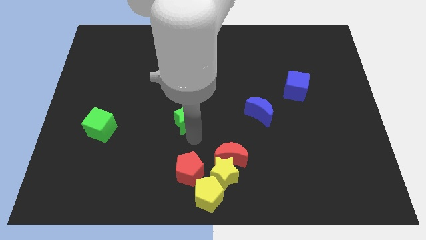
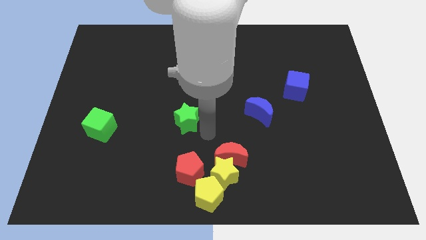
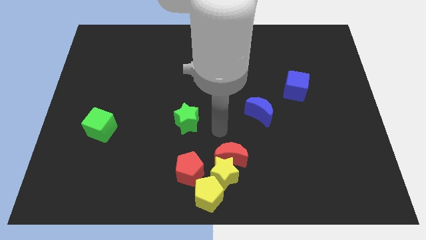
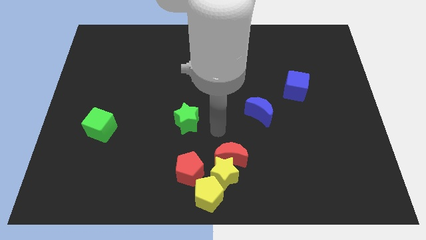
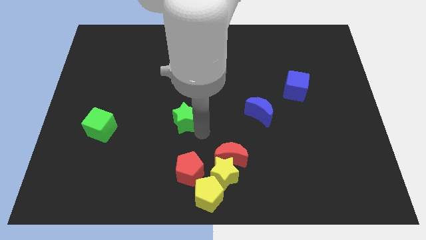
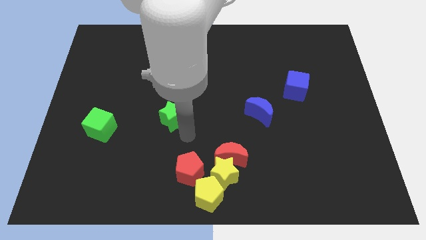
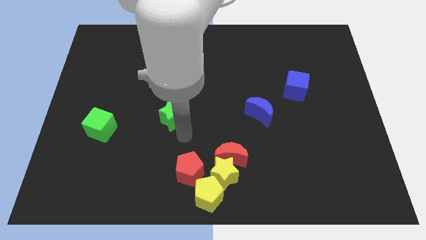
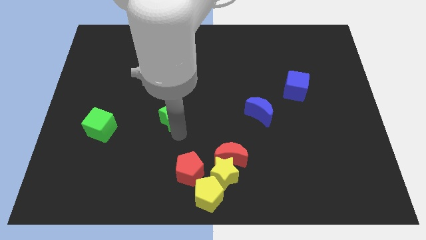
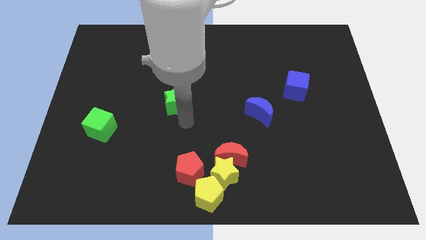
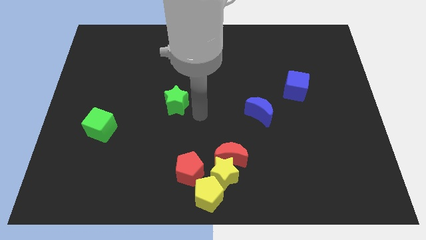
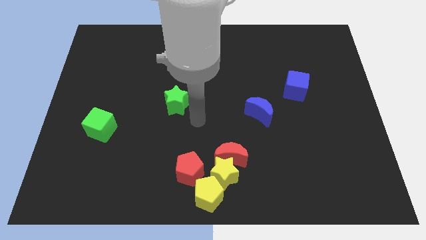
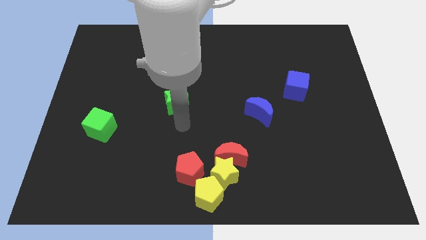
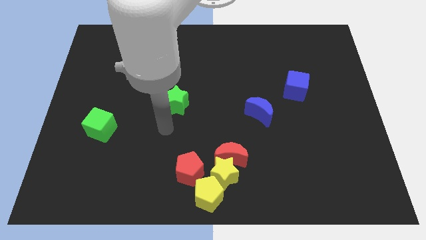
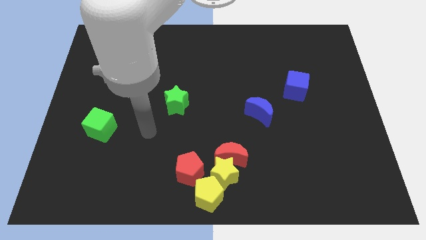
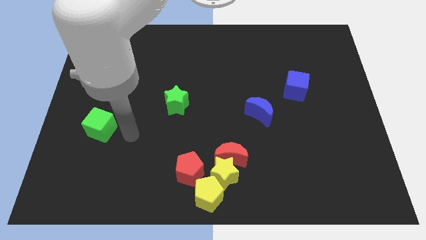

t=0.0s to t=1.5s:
slide the green star slightly towards up

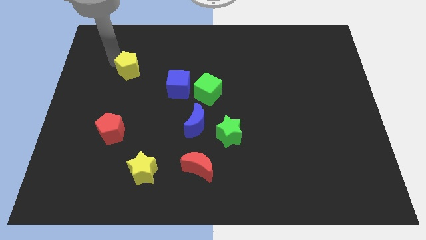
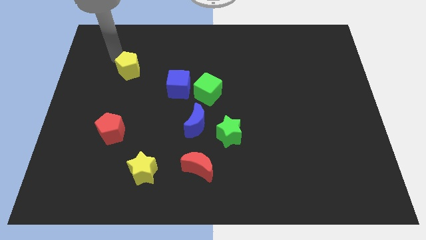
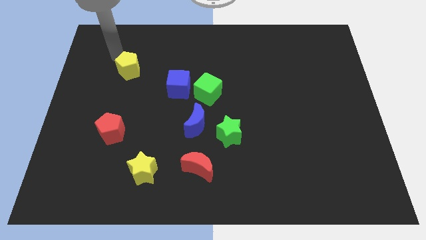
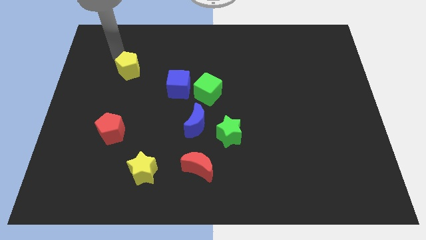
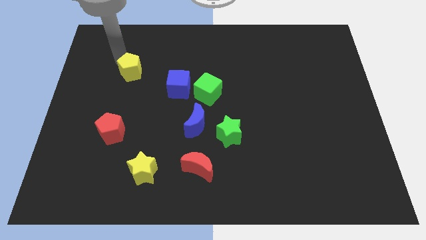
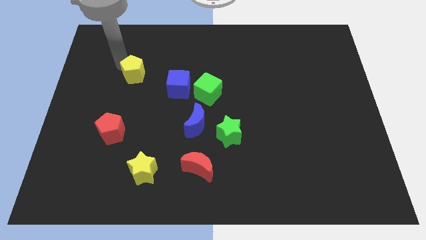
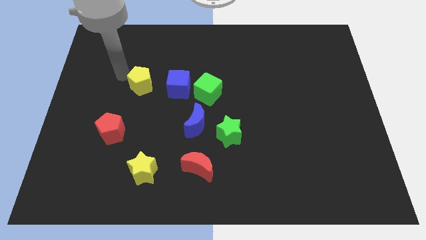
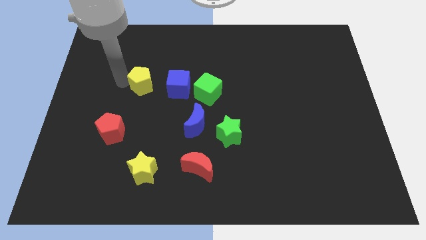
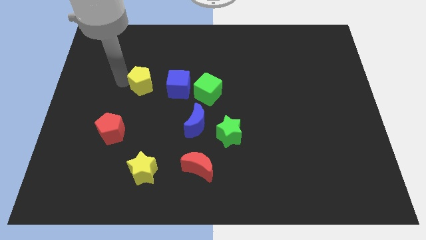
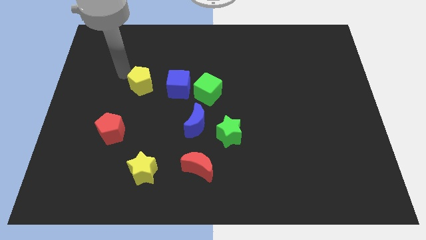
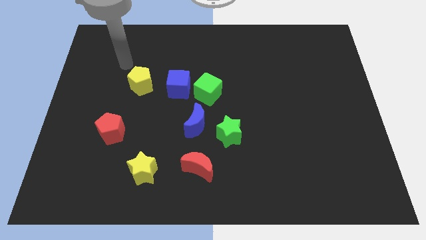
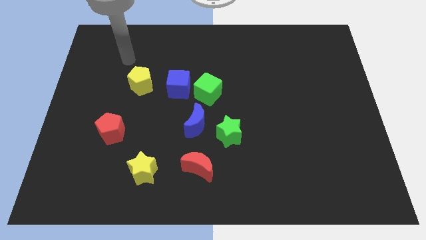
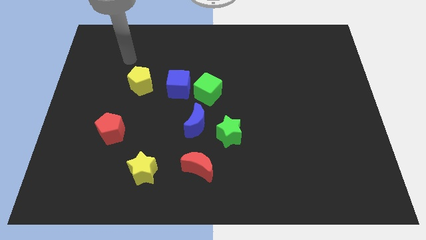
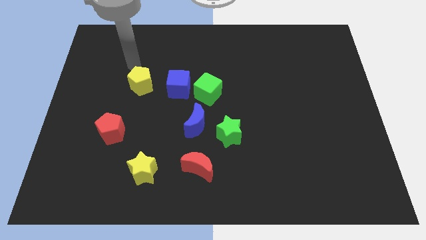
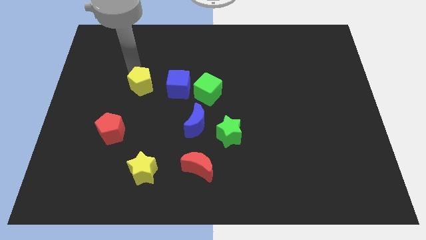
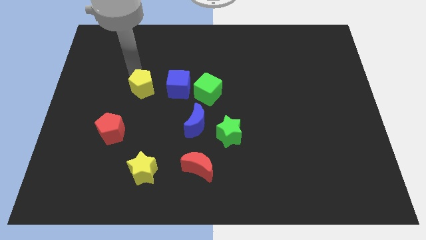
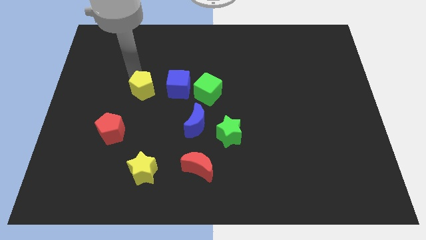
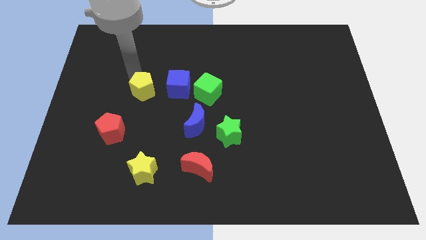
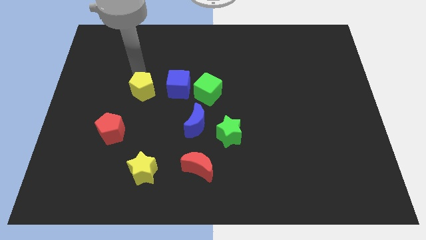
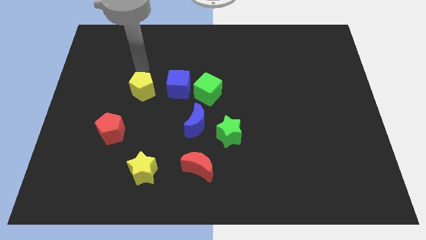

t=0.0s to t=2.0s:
move the yellow pentagon to the left side of the blue cube

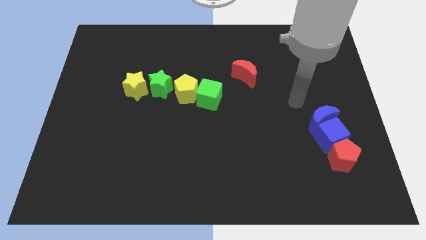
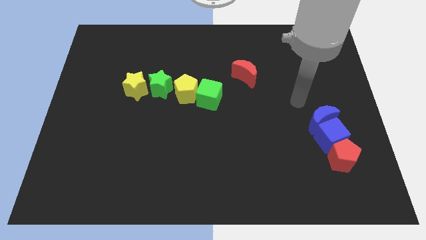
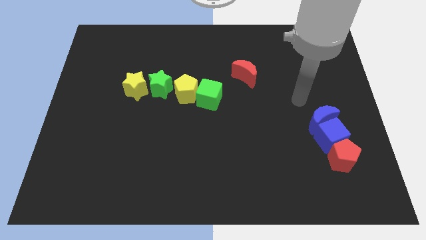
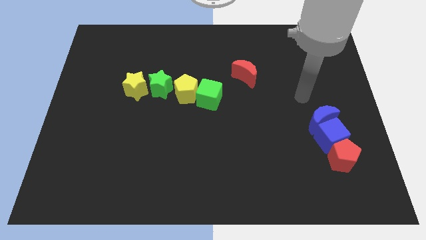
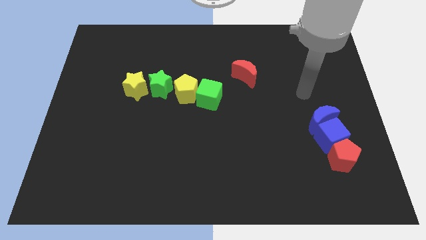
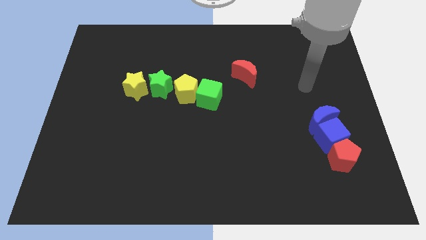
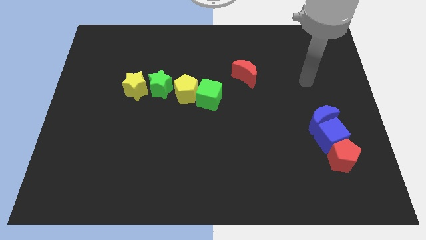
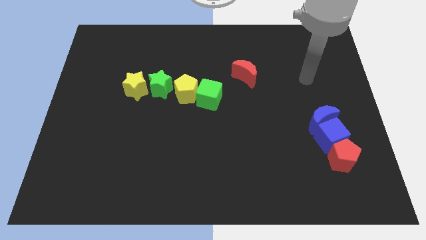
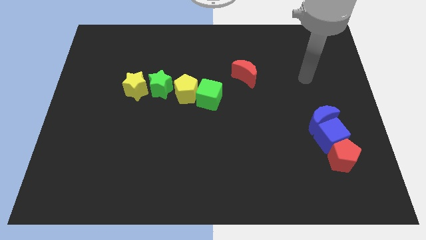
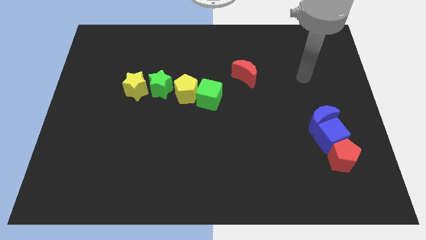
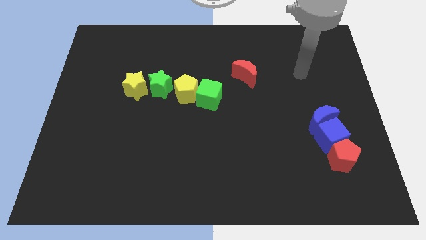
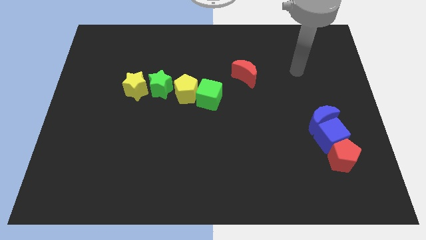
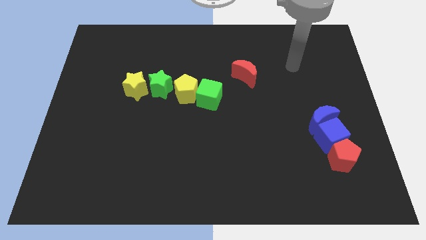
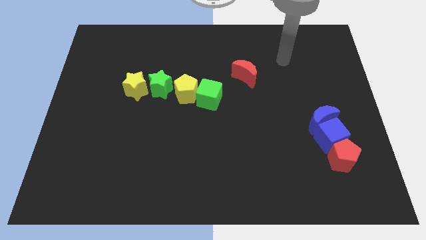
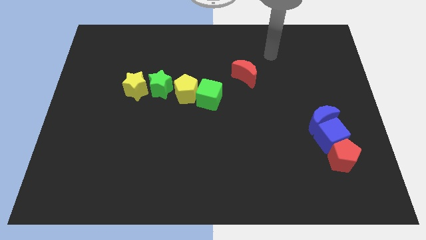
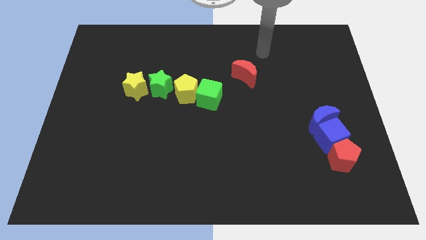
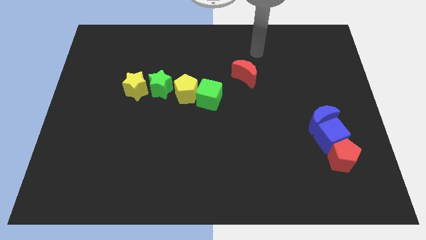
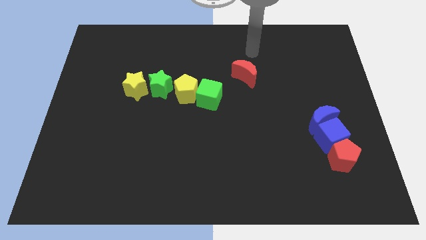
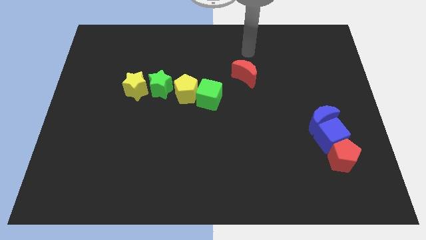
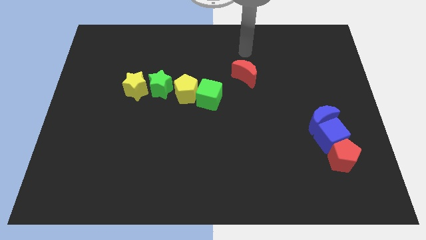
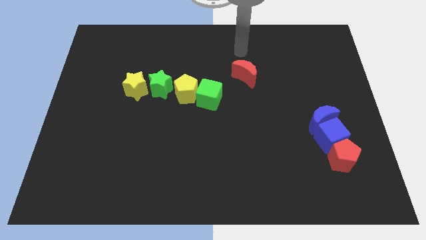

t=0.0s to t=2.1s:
move your arm to the top side of the red block

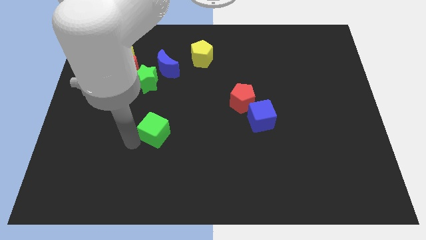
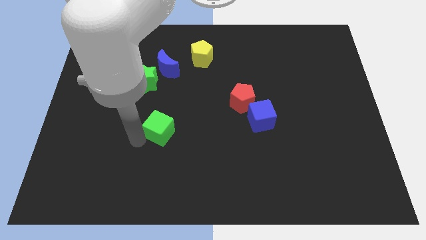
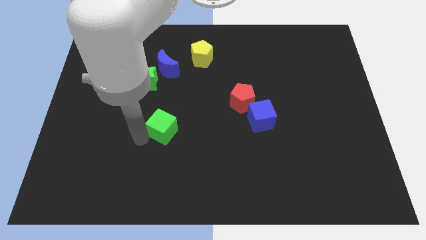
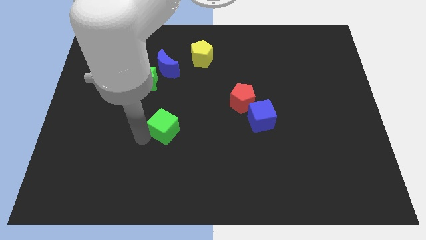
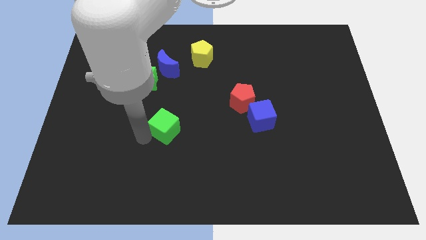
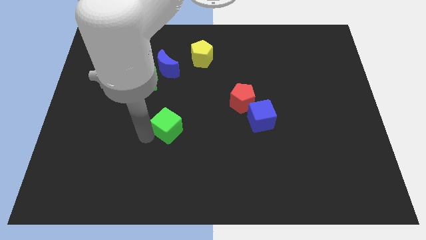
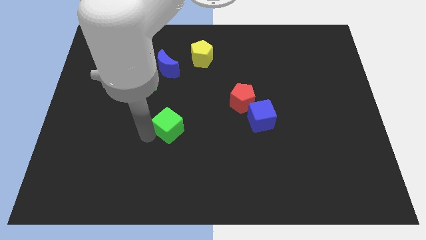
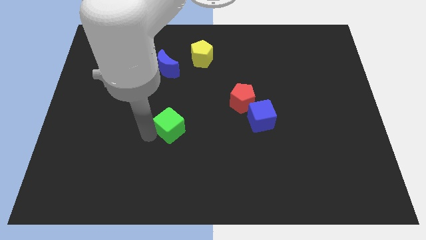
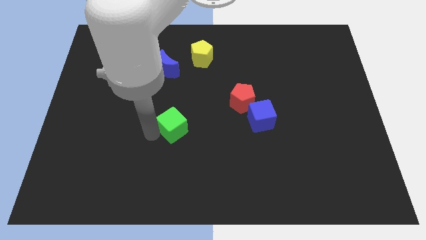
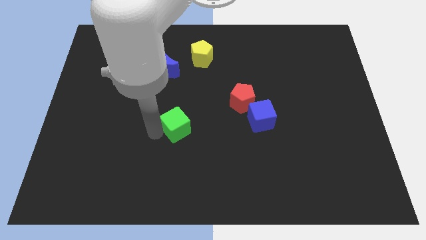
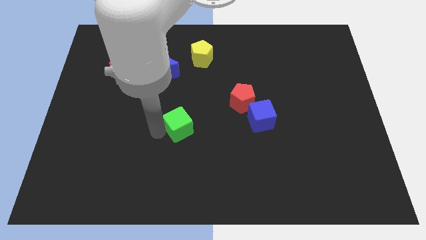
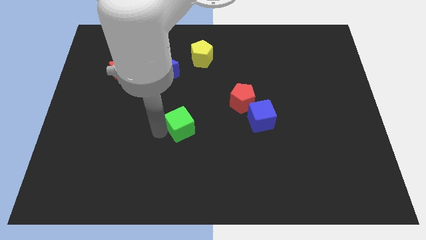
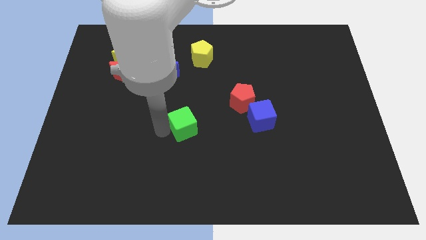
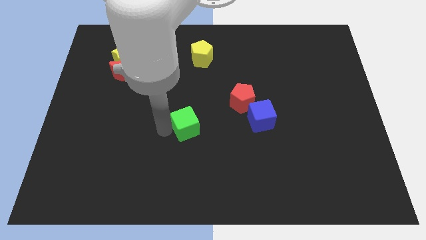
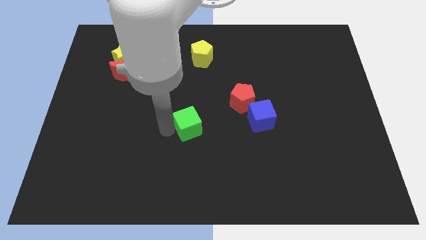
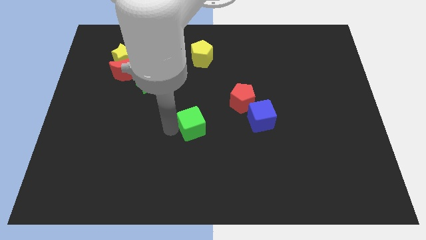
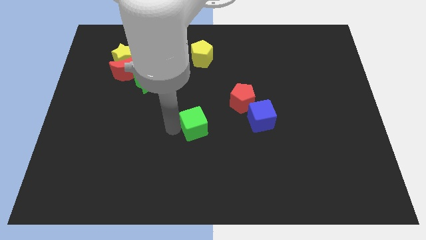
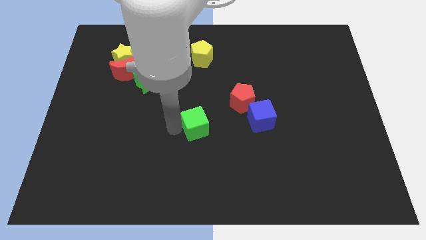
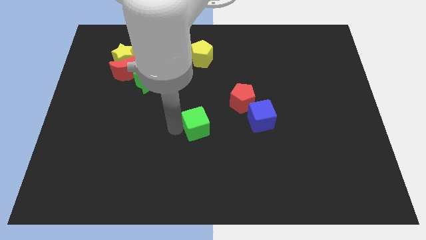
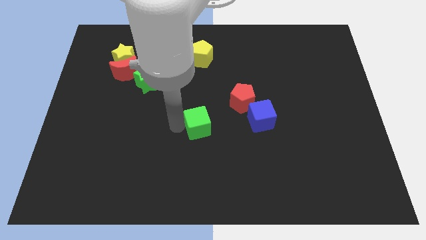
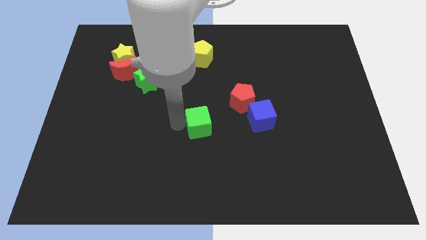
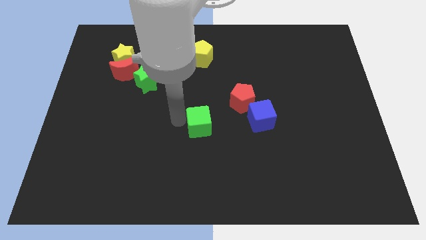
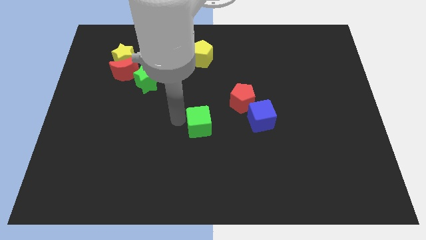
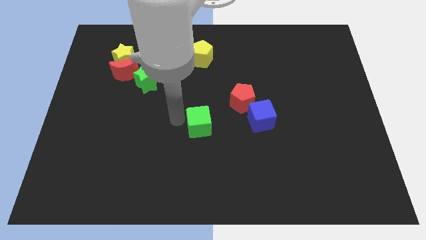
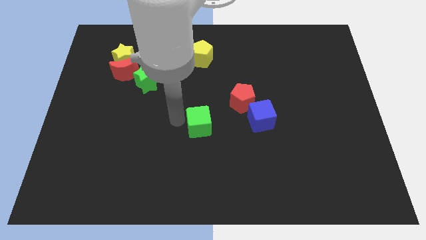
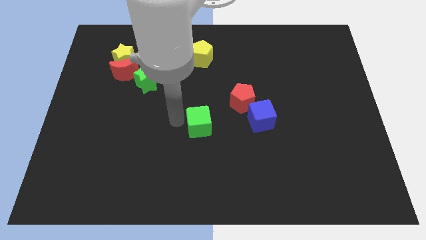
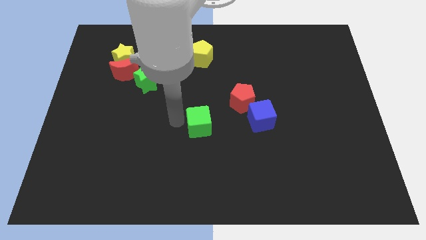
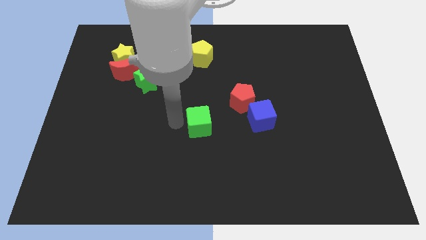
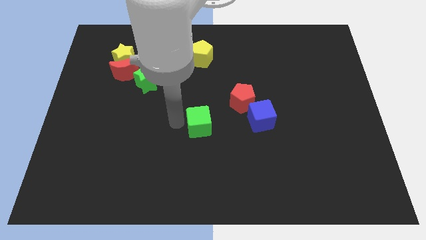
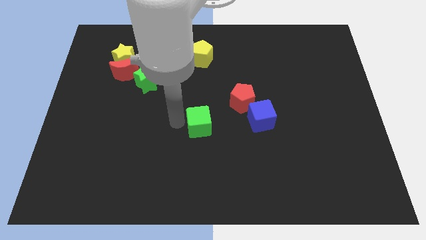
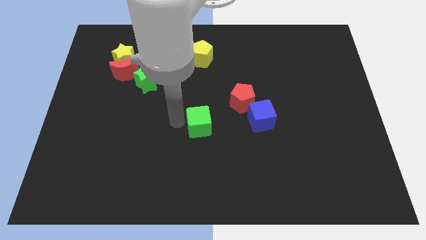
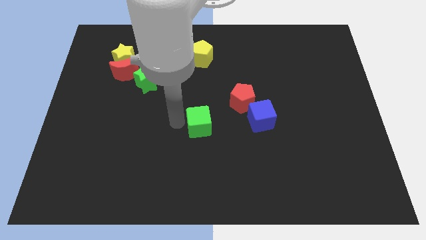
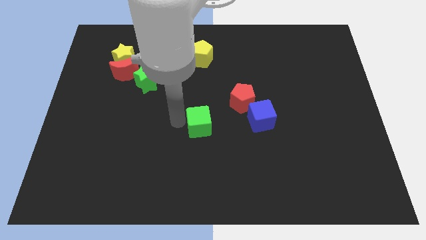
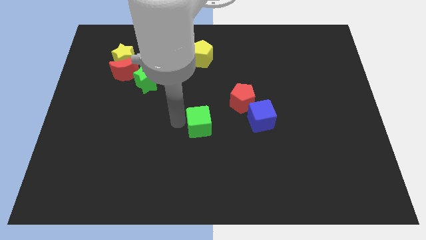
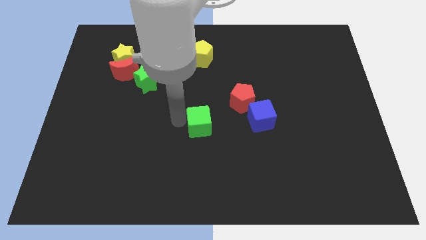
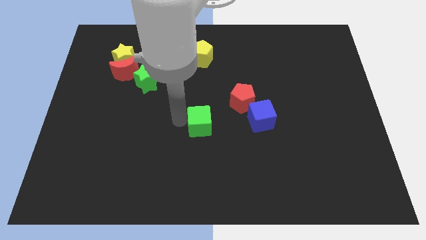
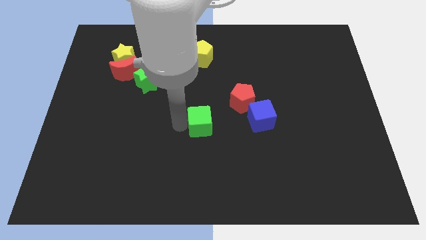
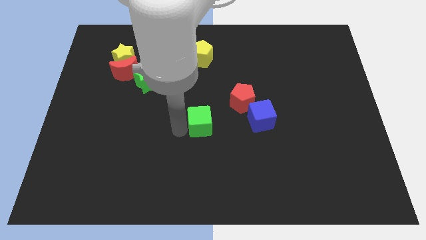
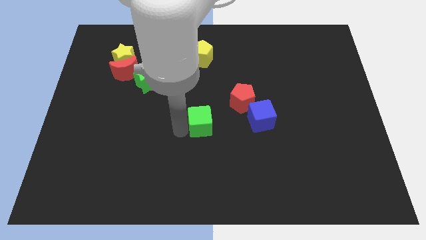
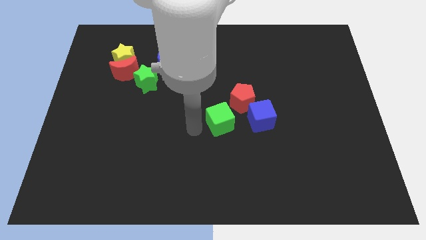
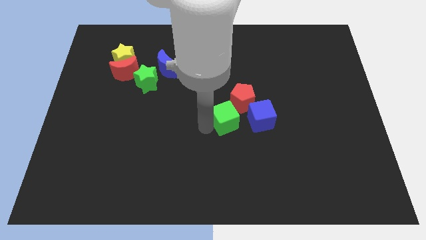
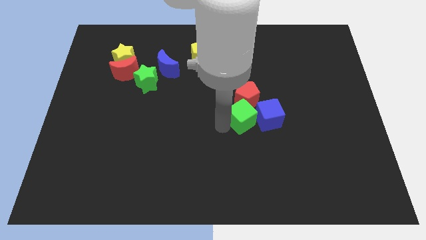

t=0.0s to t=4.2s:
move the green cube to the left of the blue cube
